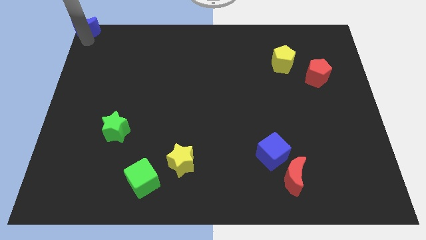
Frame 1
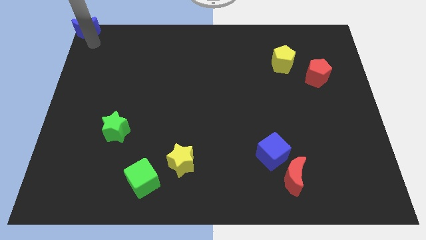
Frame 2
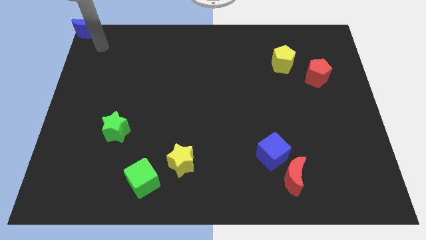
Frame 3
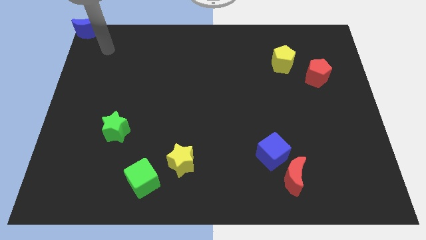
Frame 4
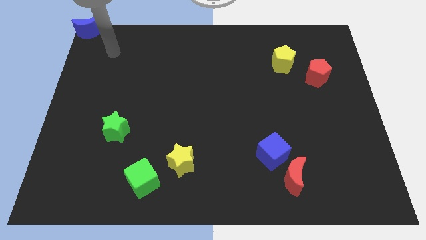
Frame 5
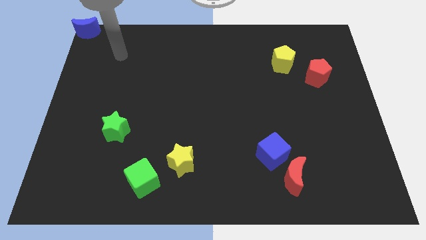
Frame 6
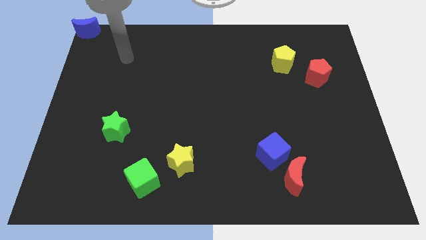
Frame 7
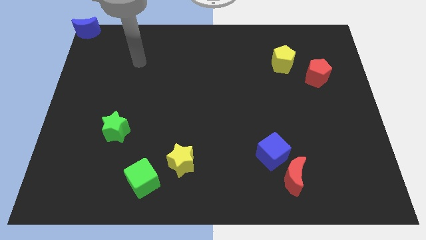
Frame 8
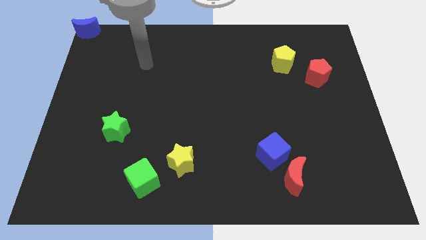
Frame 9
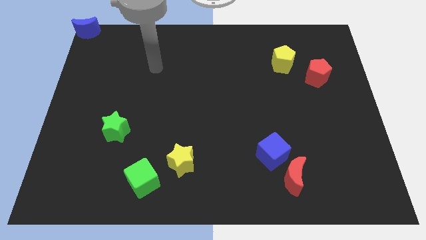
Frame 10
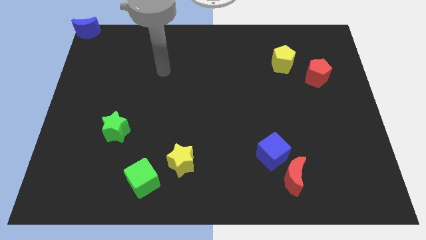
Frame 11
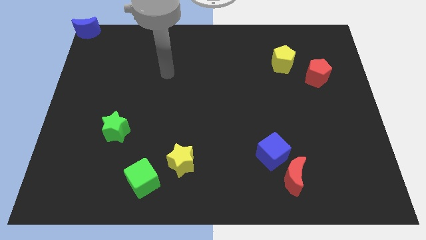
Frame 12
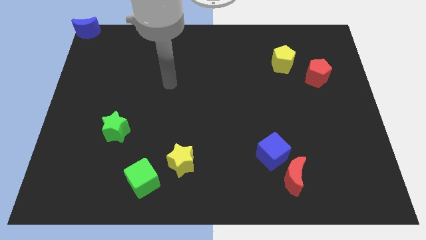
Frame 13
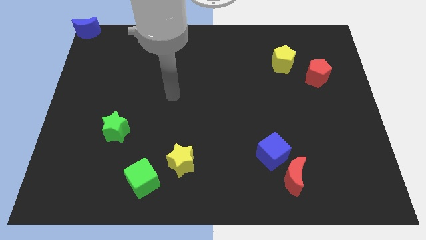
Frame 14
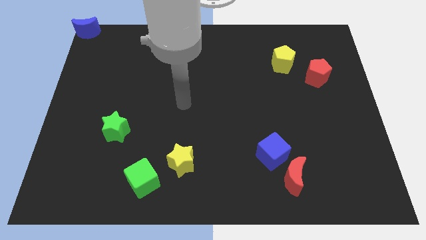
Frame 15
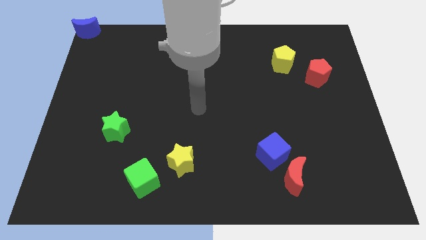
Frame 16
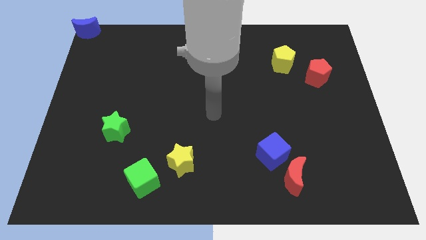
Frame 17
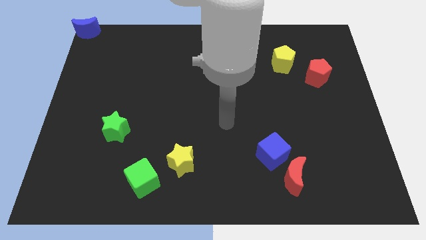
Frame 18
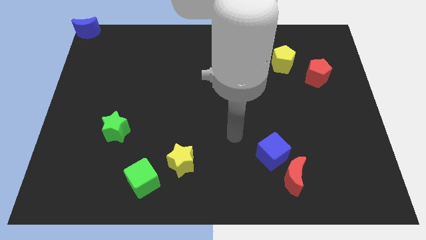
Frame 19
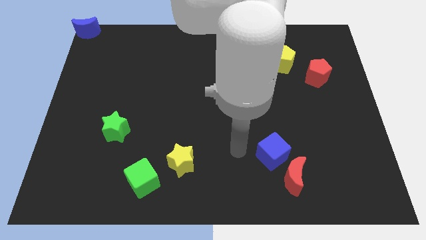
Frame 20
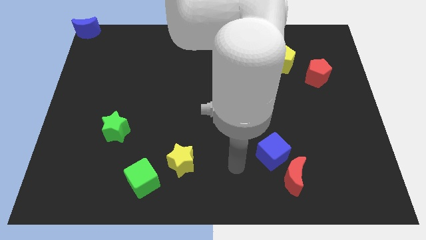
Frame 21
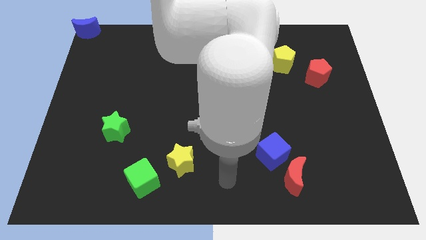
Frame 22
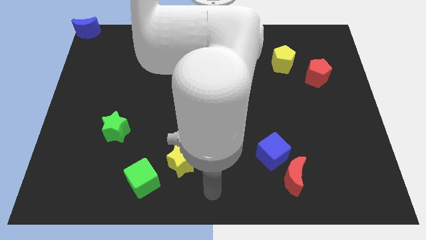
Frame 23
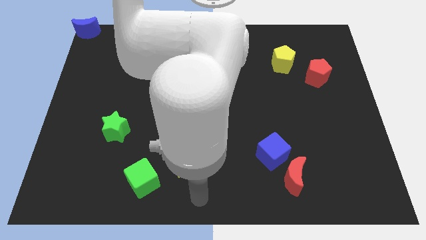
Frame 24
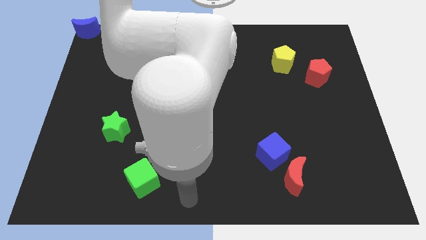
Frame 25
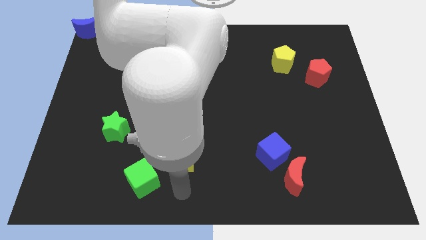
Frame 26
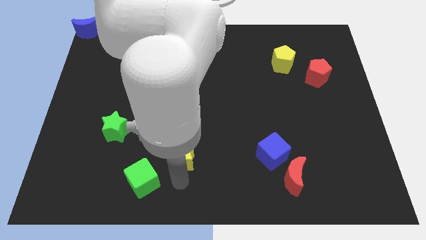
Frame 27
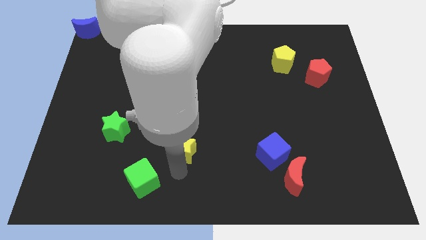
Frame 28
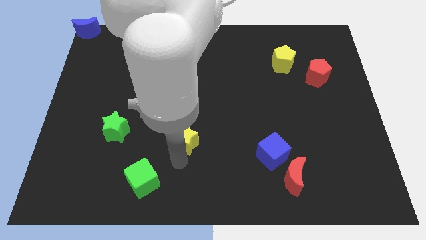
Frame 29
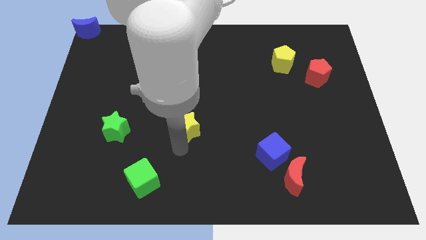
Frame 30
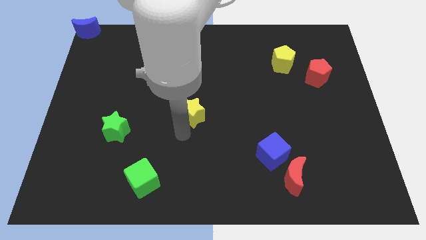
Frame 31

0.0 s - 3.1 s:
drag yellow star towards center

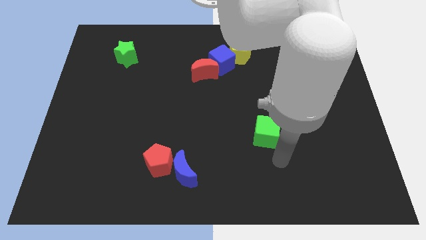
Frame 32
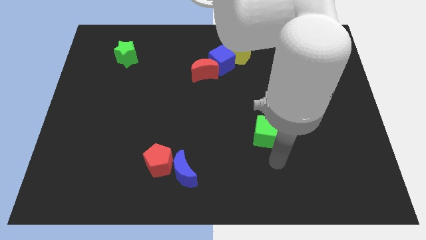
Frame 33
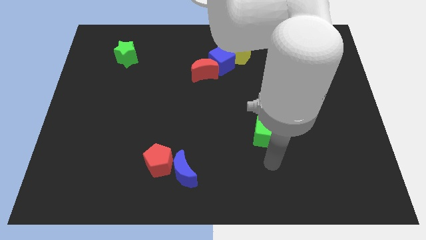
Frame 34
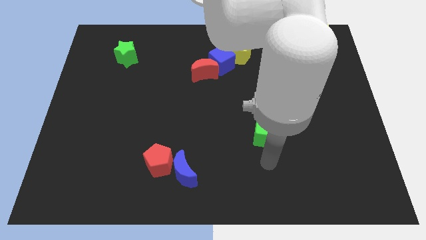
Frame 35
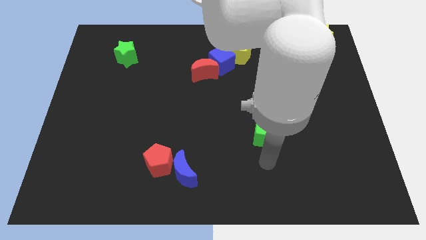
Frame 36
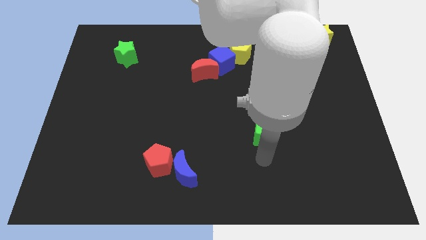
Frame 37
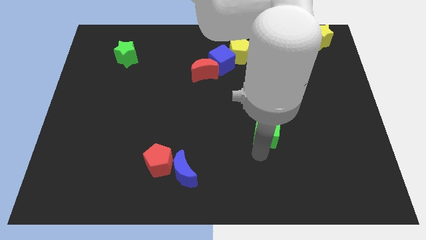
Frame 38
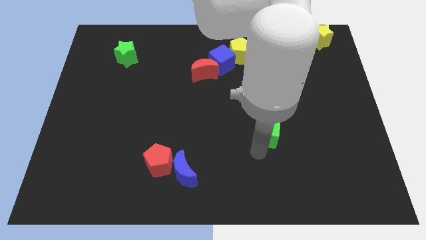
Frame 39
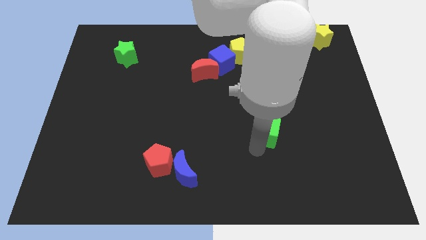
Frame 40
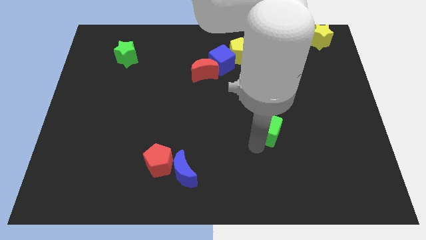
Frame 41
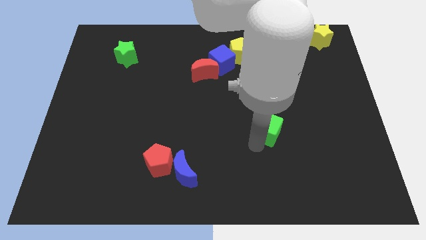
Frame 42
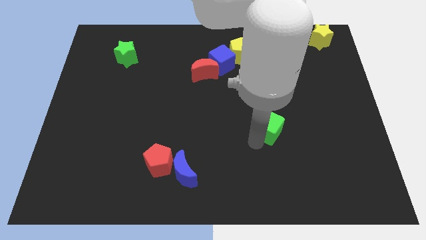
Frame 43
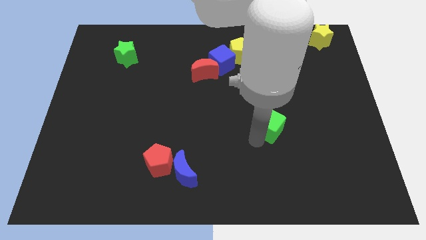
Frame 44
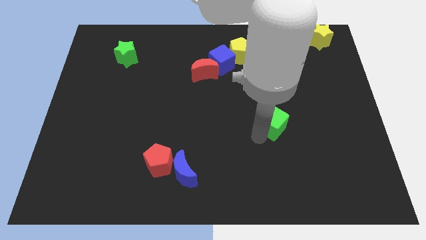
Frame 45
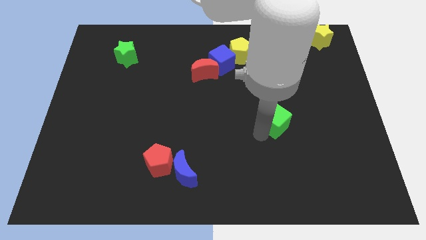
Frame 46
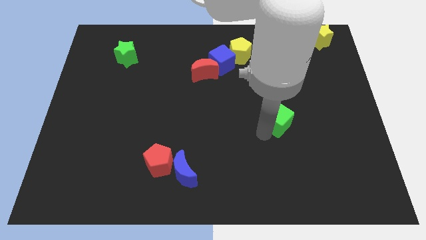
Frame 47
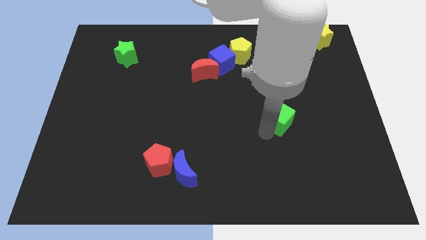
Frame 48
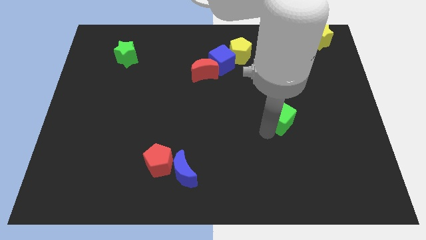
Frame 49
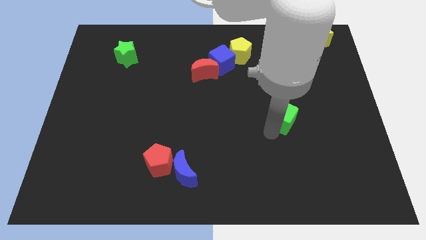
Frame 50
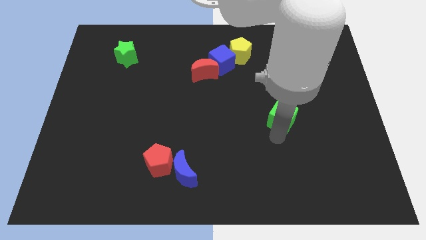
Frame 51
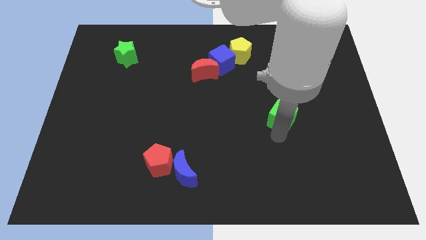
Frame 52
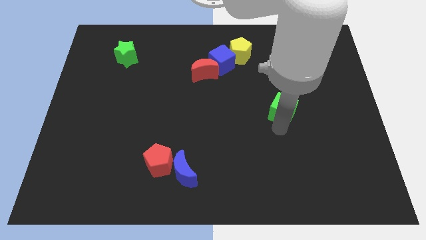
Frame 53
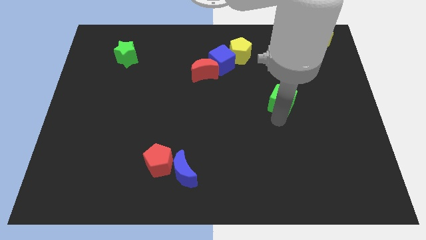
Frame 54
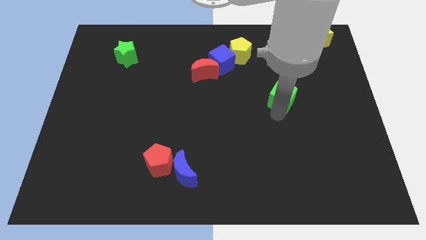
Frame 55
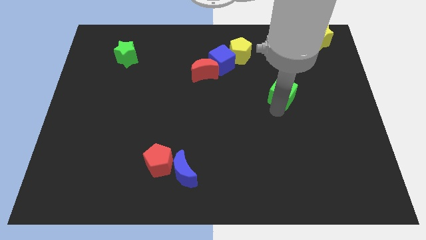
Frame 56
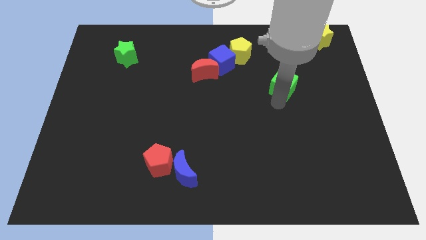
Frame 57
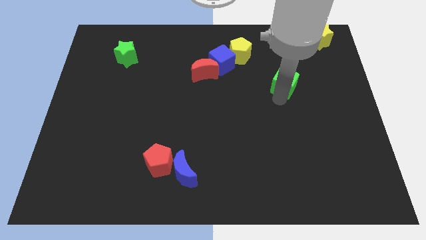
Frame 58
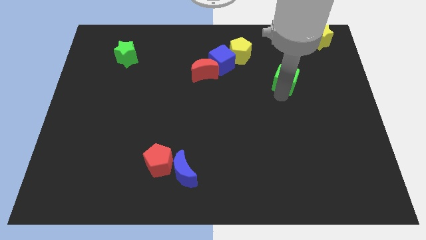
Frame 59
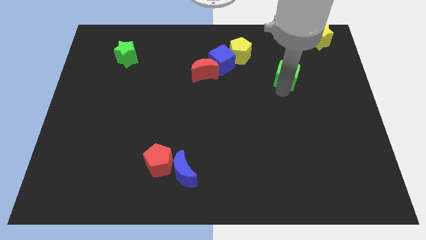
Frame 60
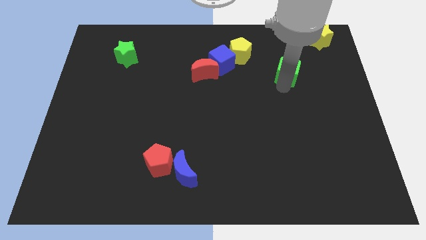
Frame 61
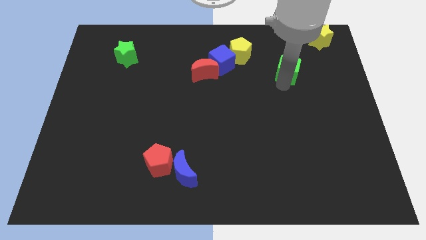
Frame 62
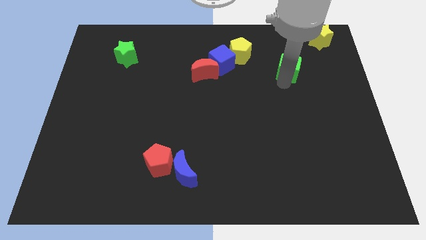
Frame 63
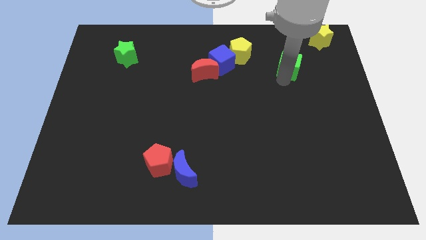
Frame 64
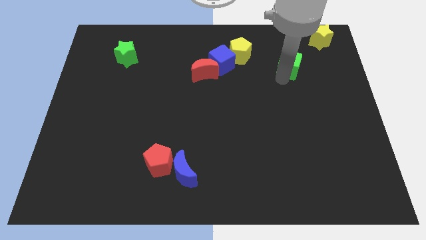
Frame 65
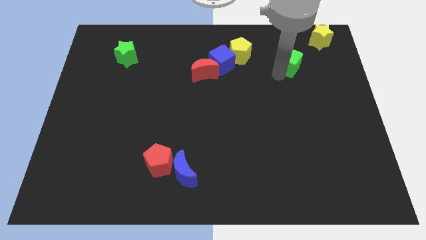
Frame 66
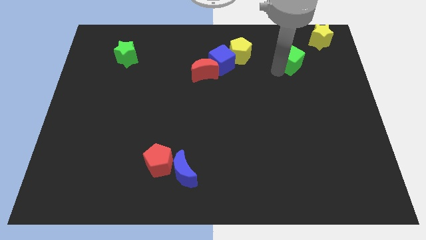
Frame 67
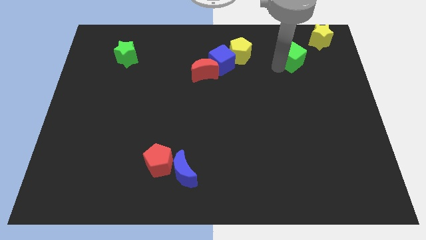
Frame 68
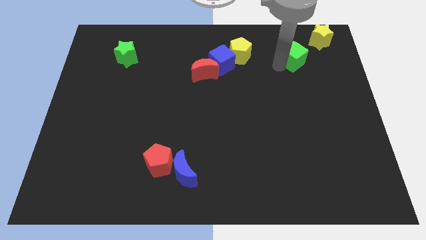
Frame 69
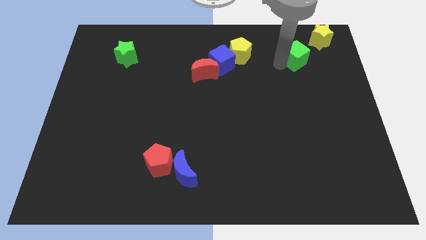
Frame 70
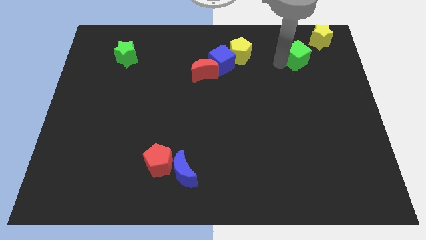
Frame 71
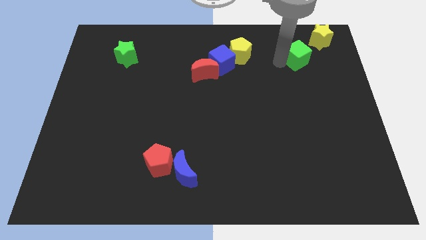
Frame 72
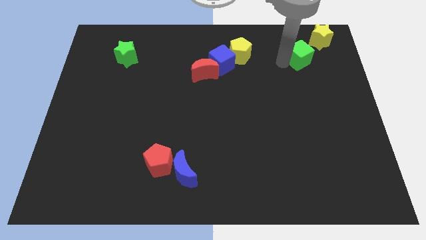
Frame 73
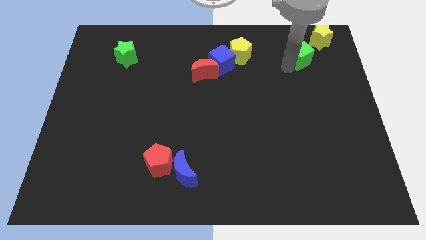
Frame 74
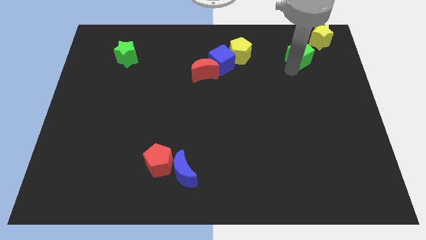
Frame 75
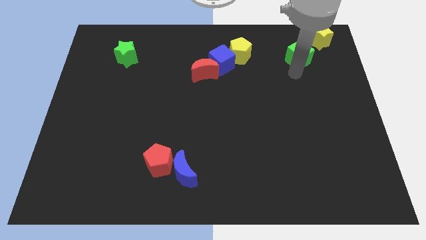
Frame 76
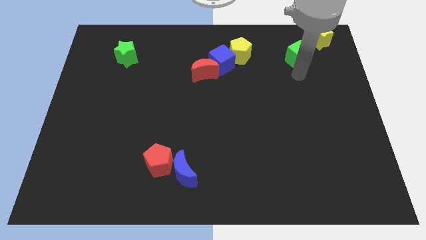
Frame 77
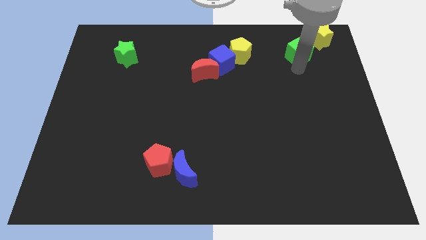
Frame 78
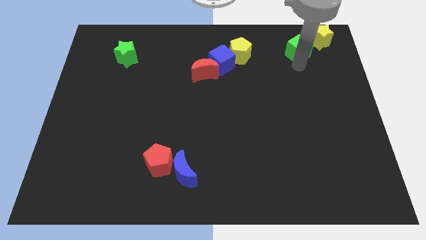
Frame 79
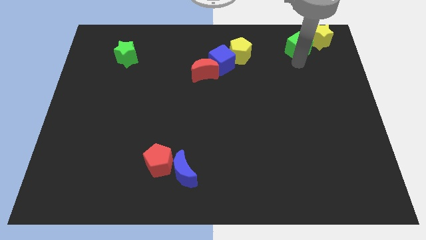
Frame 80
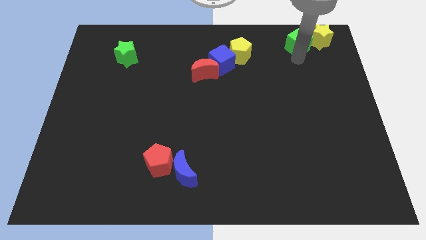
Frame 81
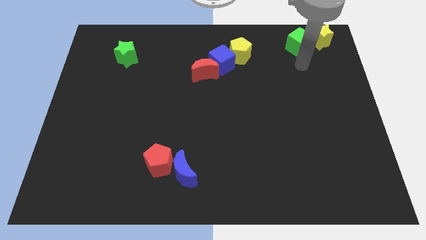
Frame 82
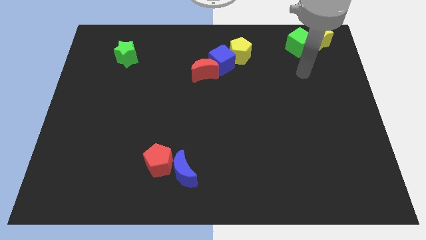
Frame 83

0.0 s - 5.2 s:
move the green cube to the left of the yellow star

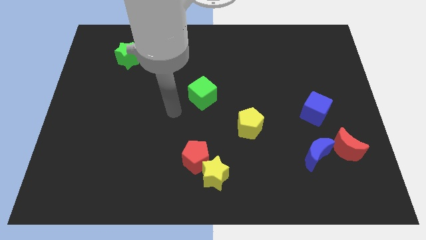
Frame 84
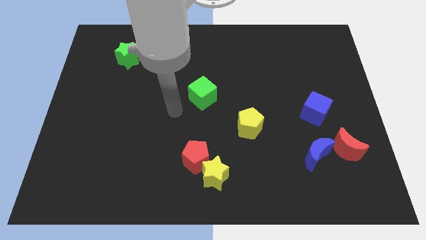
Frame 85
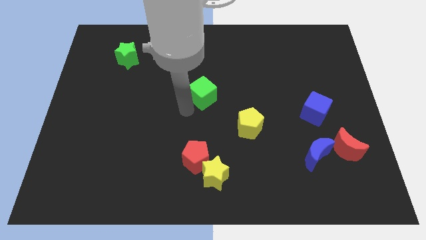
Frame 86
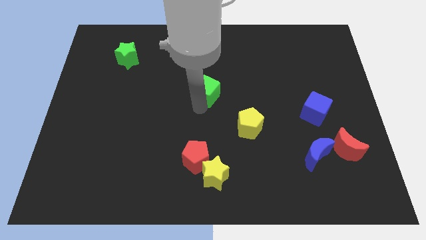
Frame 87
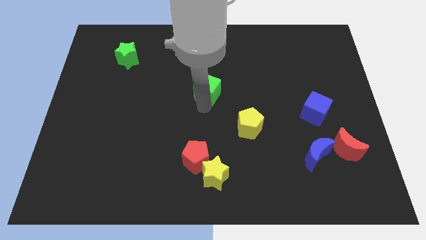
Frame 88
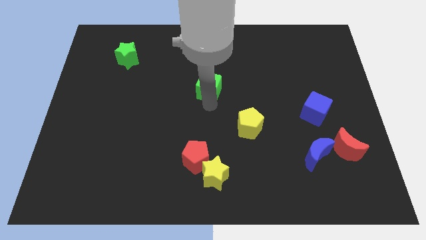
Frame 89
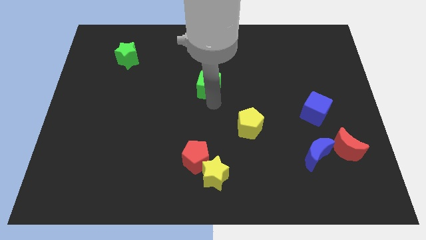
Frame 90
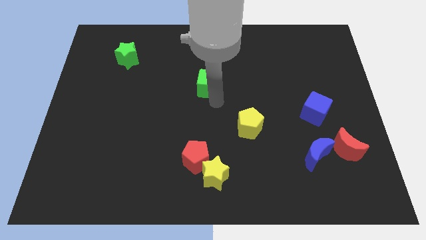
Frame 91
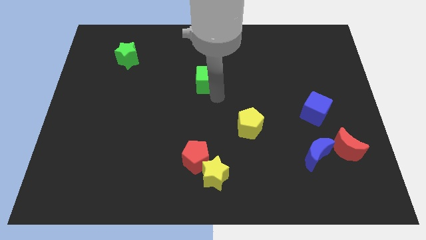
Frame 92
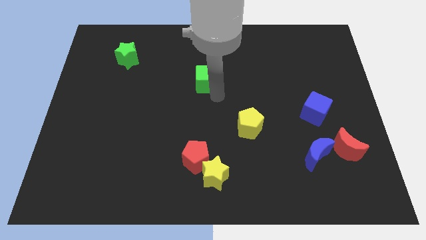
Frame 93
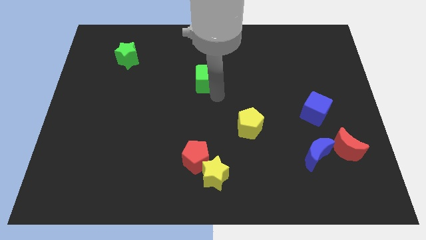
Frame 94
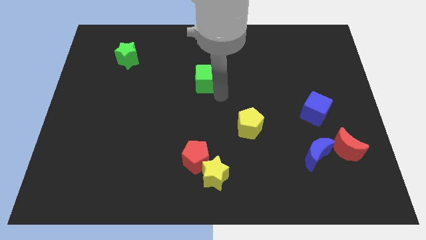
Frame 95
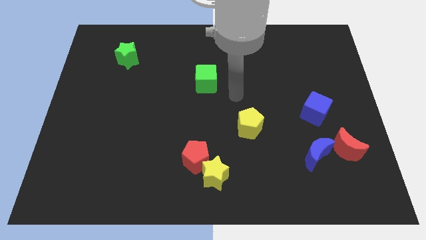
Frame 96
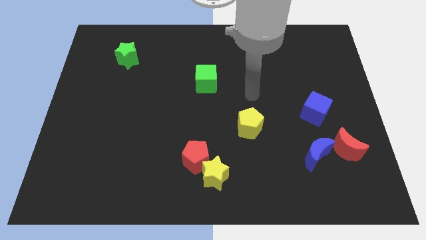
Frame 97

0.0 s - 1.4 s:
move the green cube slightly towards the top
